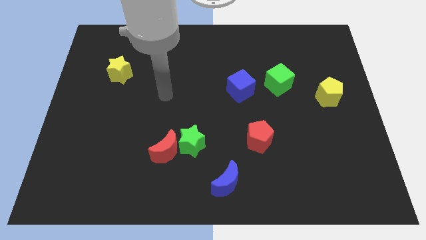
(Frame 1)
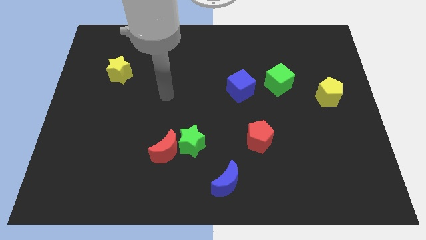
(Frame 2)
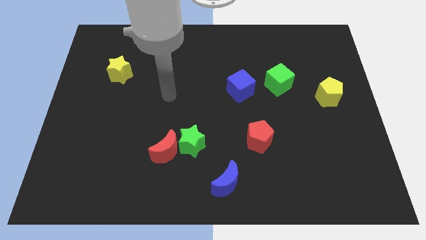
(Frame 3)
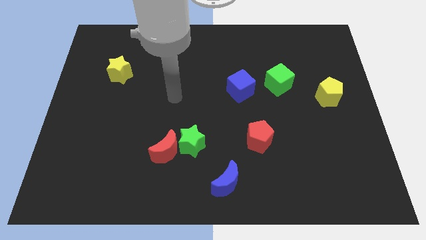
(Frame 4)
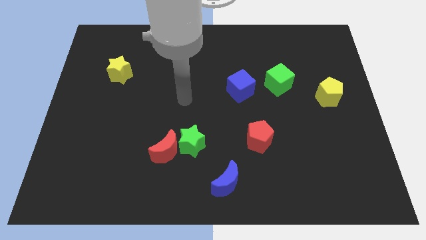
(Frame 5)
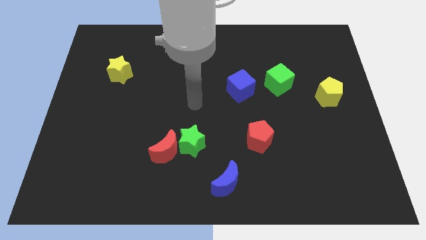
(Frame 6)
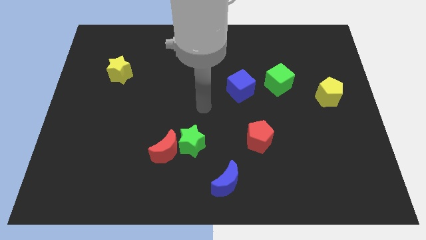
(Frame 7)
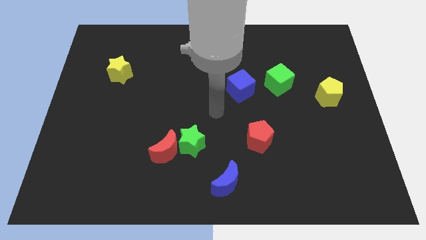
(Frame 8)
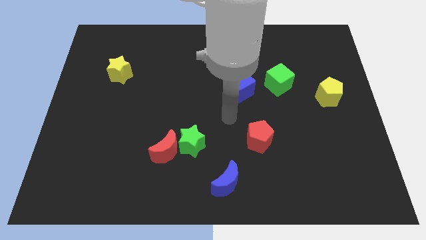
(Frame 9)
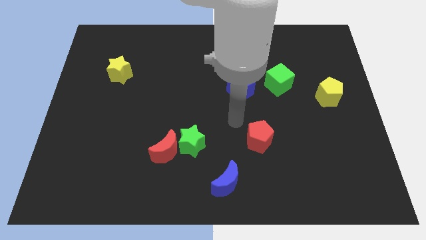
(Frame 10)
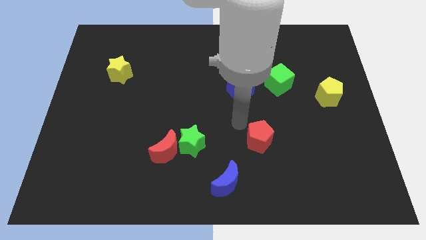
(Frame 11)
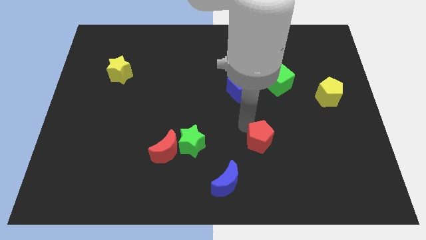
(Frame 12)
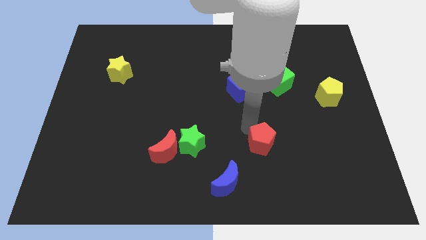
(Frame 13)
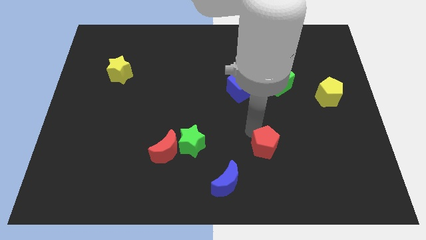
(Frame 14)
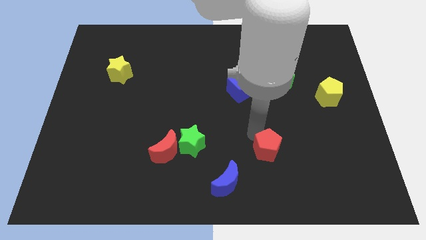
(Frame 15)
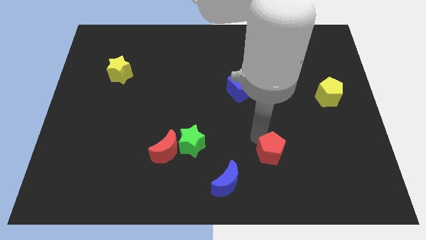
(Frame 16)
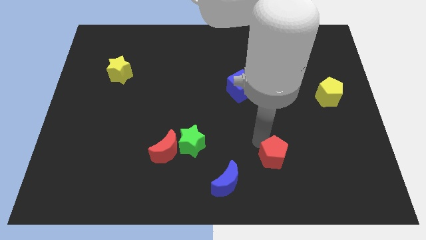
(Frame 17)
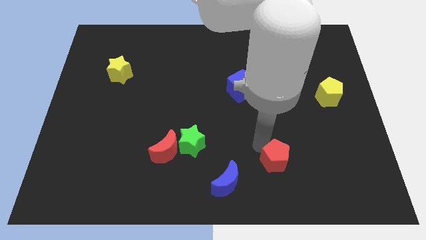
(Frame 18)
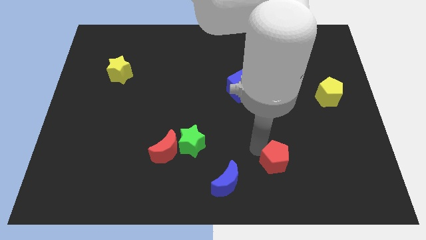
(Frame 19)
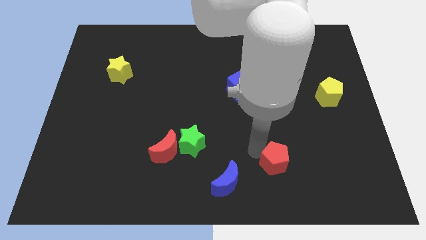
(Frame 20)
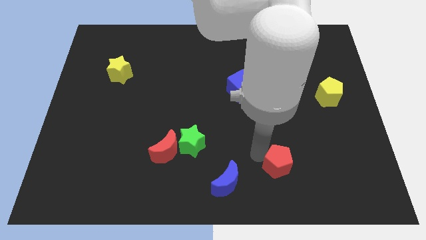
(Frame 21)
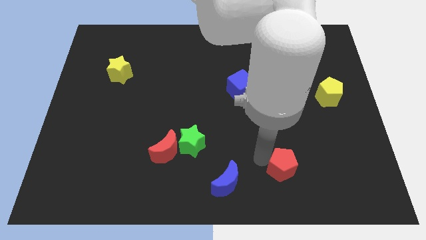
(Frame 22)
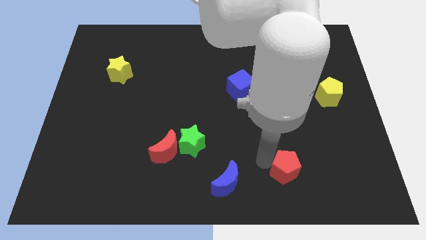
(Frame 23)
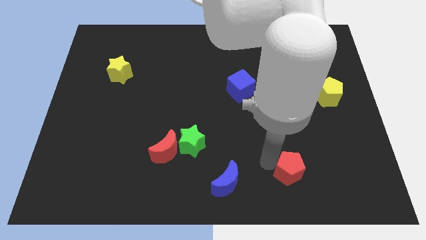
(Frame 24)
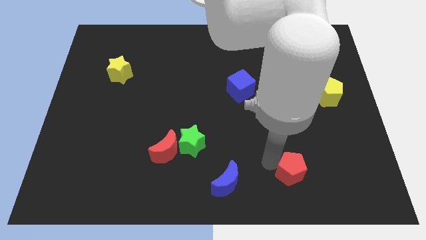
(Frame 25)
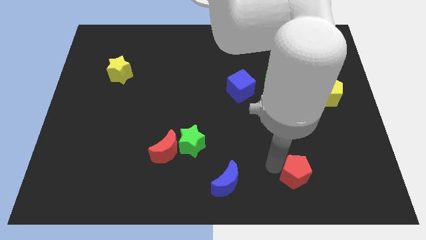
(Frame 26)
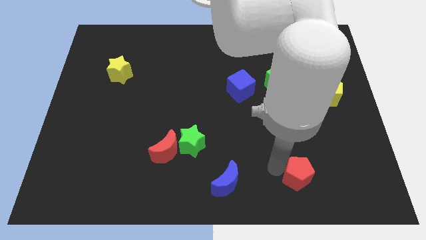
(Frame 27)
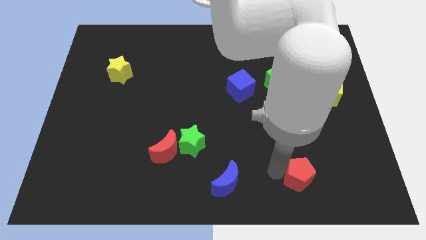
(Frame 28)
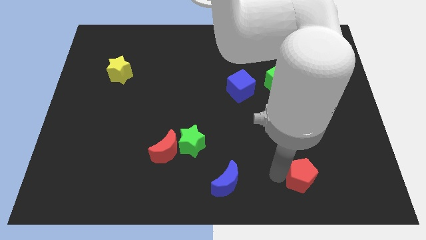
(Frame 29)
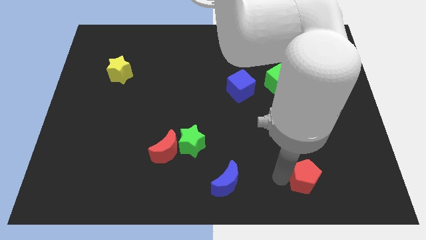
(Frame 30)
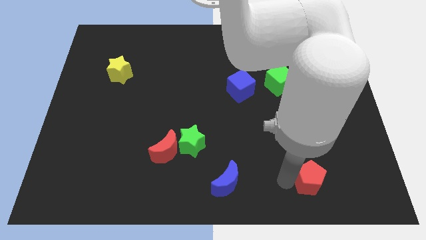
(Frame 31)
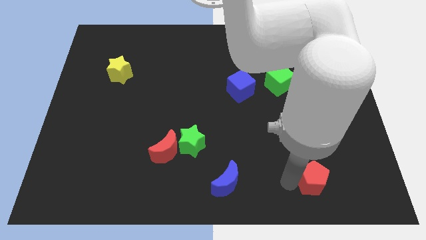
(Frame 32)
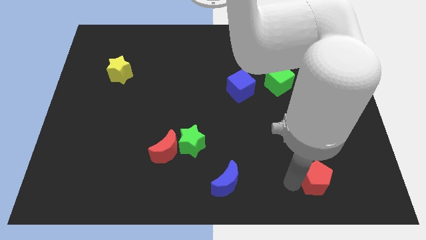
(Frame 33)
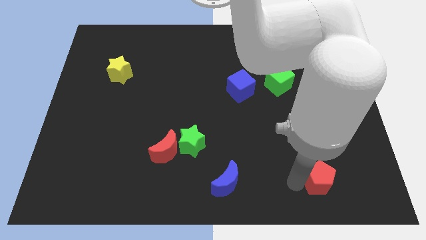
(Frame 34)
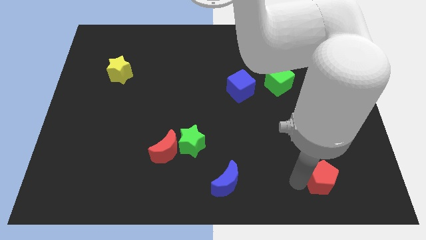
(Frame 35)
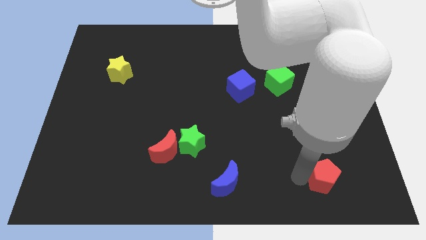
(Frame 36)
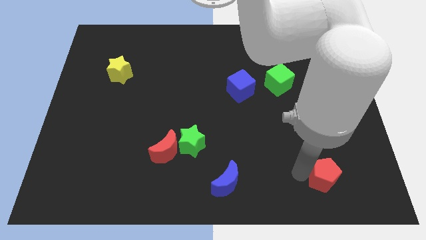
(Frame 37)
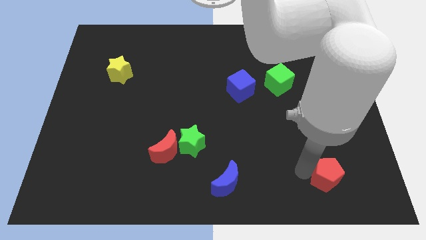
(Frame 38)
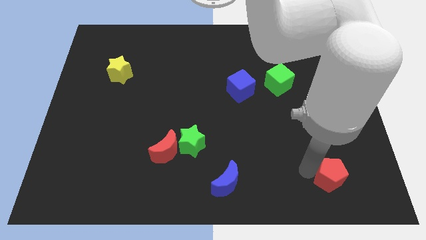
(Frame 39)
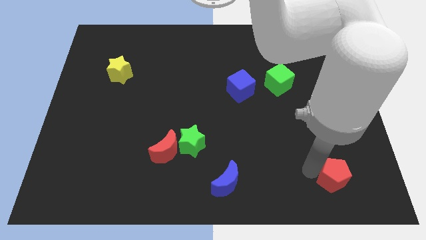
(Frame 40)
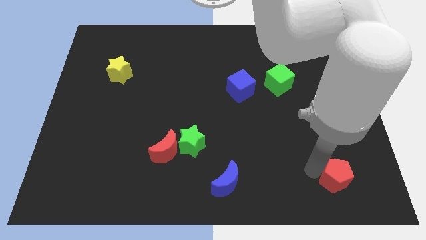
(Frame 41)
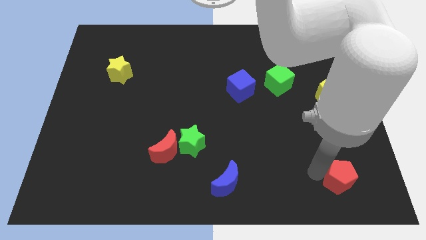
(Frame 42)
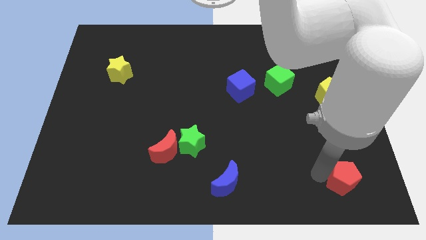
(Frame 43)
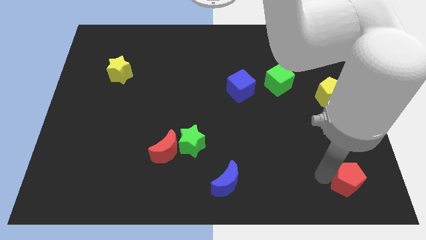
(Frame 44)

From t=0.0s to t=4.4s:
move the red pentagon to the bottom right of the board

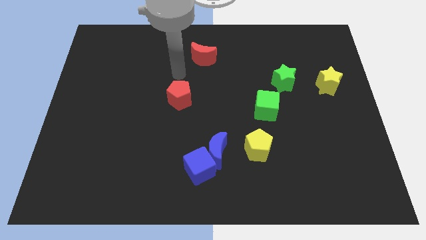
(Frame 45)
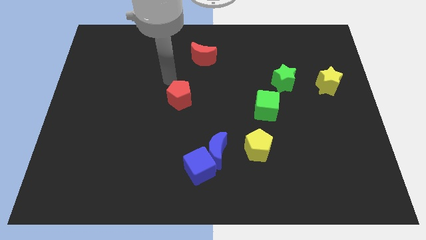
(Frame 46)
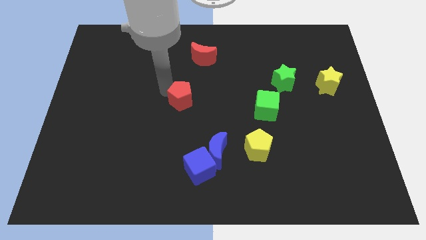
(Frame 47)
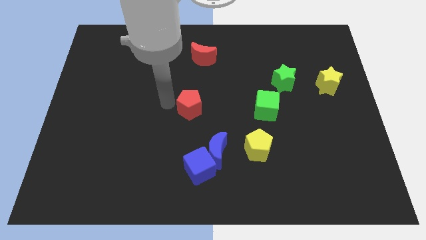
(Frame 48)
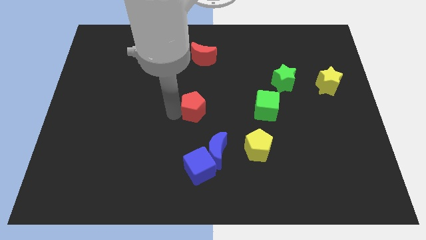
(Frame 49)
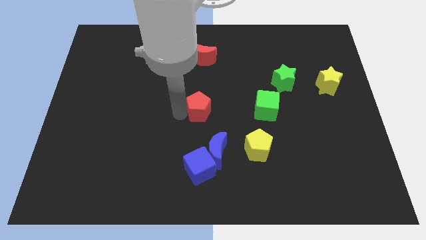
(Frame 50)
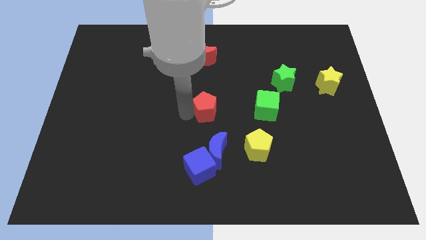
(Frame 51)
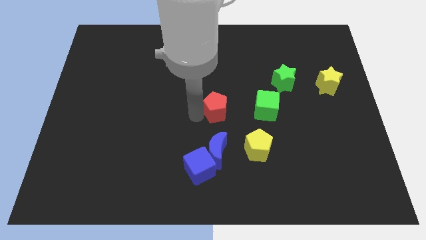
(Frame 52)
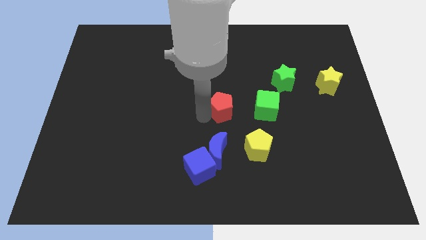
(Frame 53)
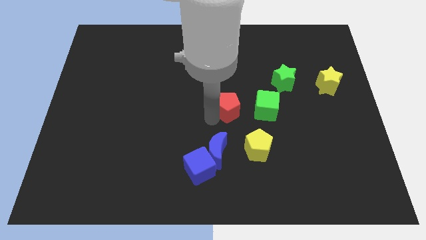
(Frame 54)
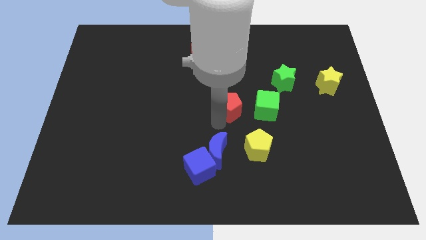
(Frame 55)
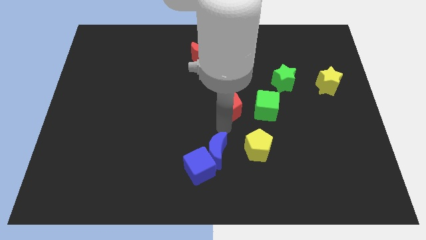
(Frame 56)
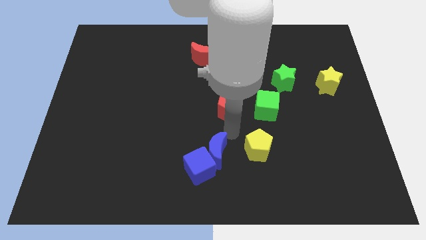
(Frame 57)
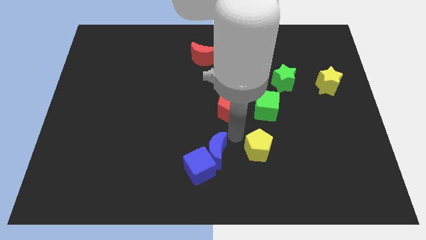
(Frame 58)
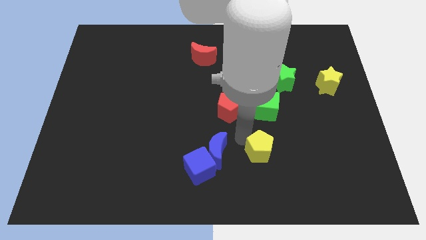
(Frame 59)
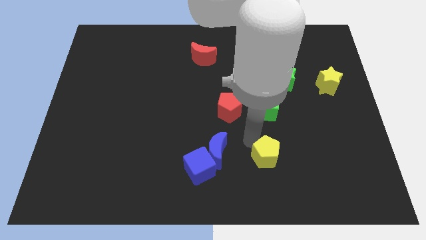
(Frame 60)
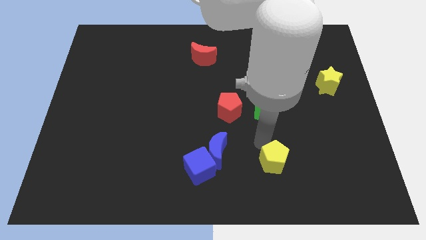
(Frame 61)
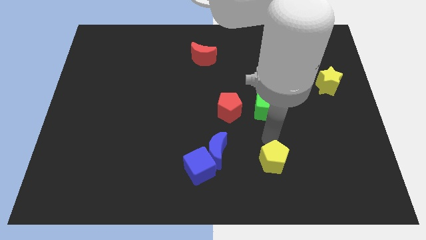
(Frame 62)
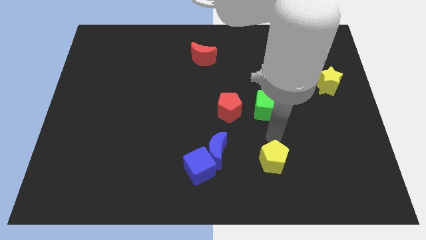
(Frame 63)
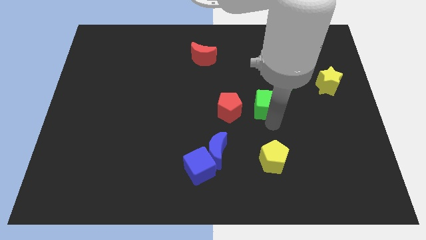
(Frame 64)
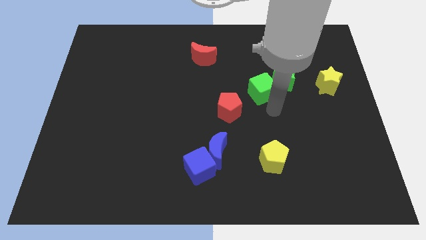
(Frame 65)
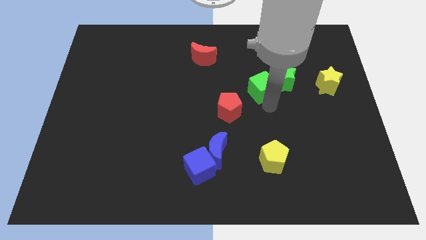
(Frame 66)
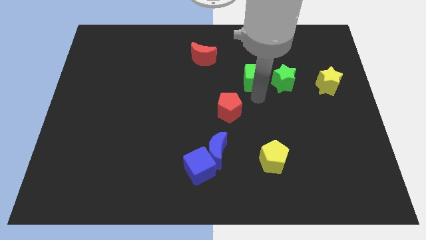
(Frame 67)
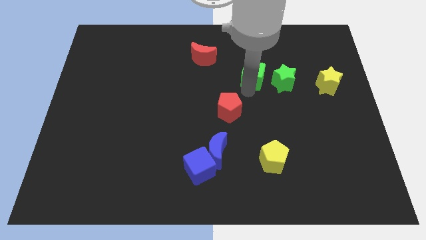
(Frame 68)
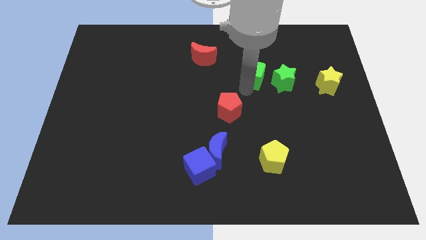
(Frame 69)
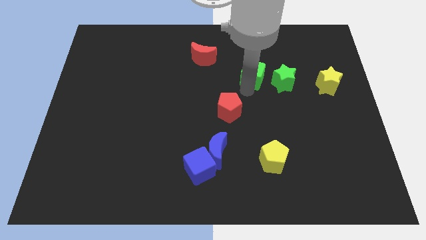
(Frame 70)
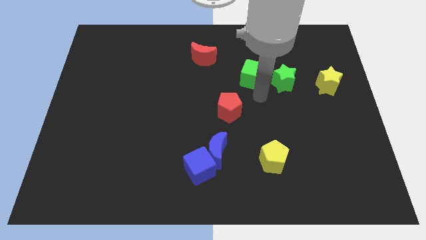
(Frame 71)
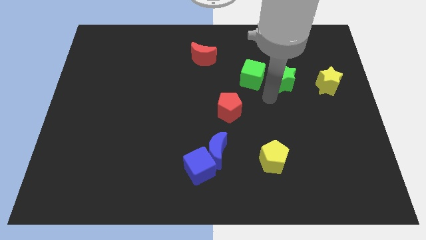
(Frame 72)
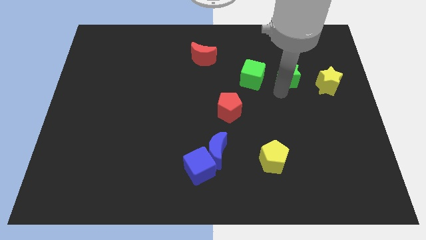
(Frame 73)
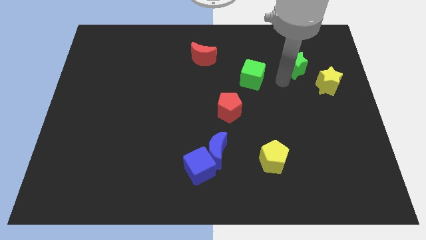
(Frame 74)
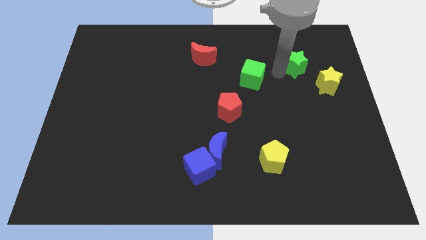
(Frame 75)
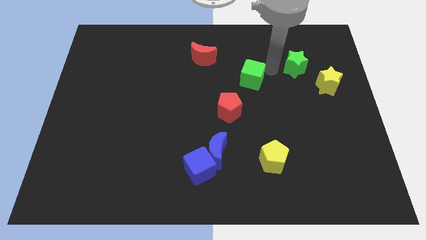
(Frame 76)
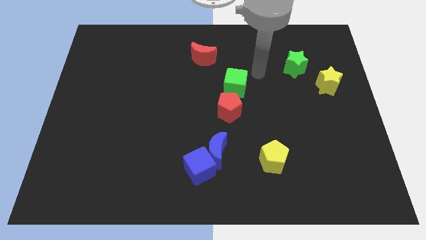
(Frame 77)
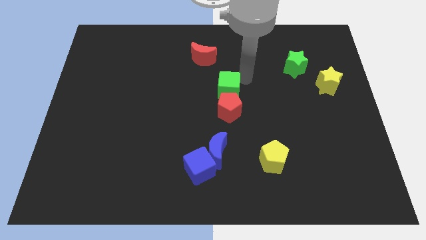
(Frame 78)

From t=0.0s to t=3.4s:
move the green cube above the red pentagon
